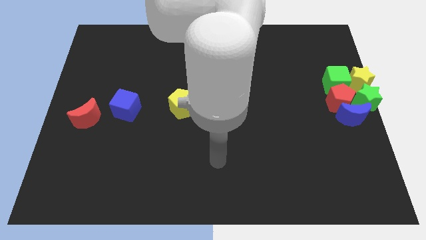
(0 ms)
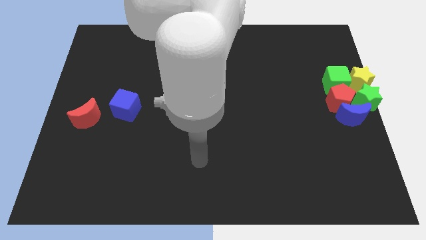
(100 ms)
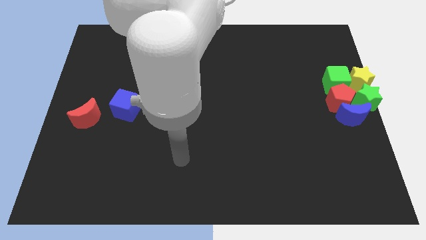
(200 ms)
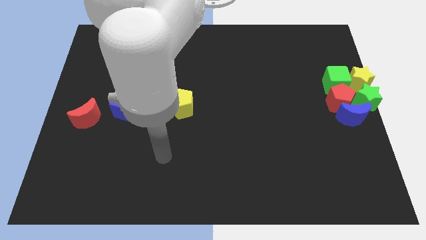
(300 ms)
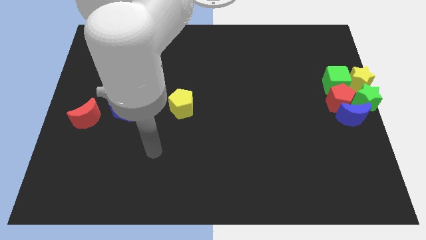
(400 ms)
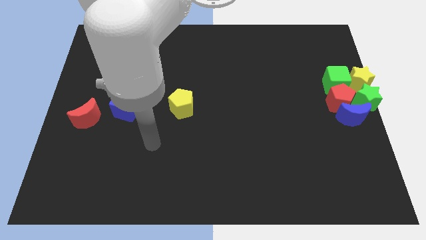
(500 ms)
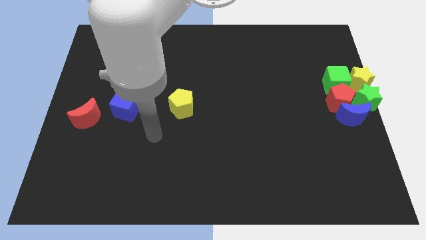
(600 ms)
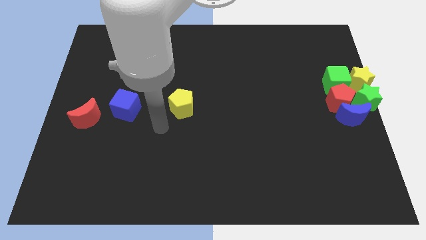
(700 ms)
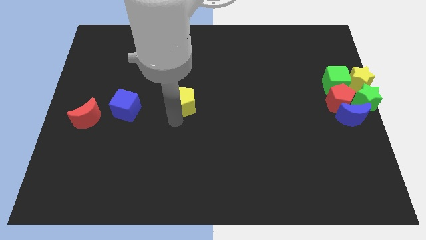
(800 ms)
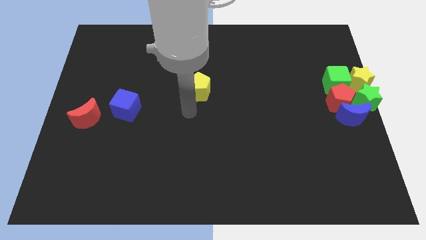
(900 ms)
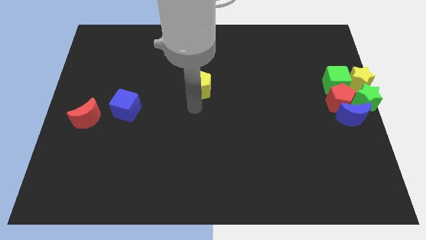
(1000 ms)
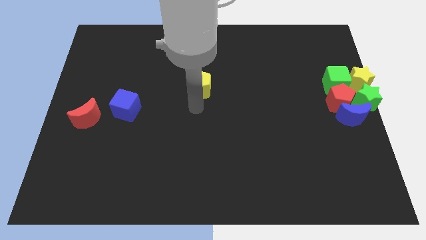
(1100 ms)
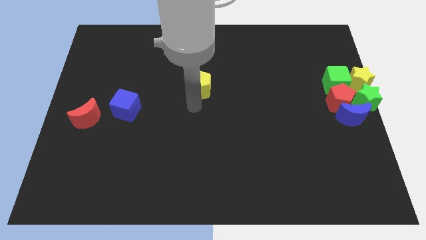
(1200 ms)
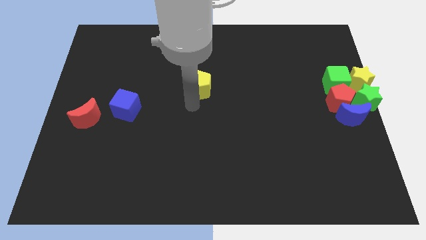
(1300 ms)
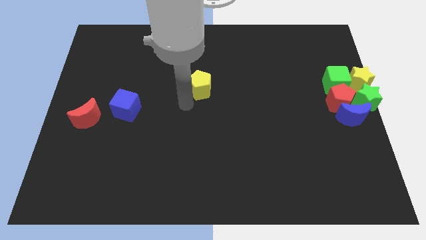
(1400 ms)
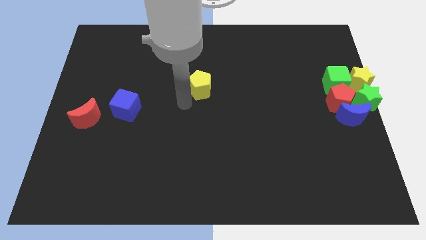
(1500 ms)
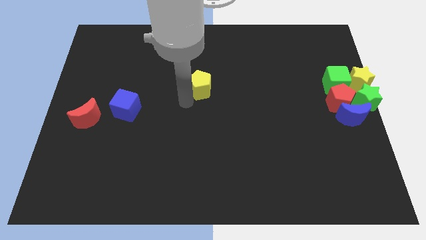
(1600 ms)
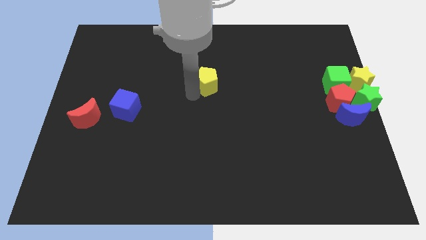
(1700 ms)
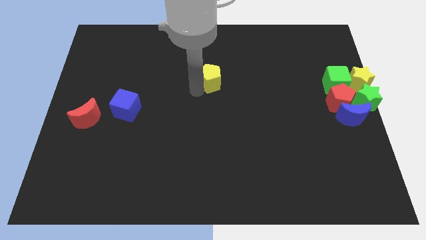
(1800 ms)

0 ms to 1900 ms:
move the yellow pentagon to the top of the board

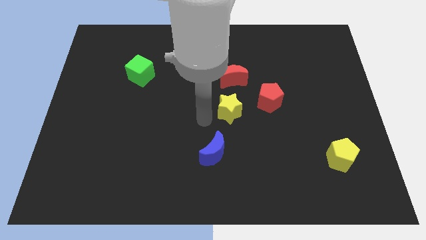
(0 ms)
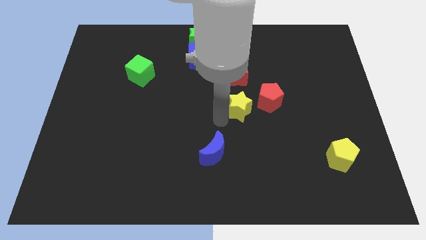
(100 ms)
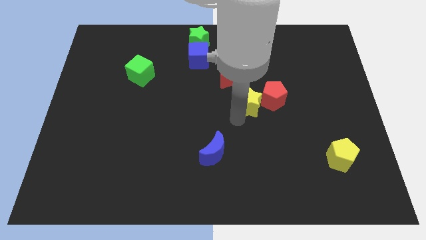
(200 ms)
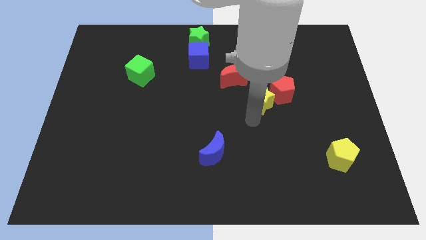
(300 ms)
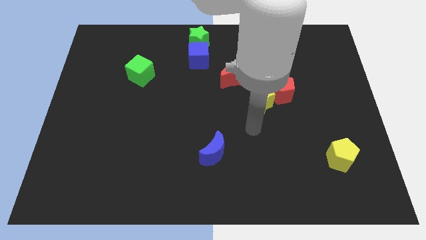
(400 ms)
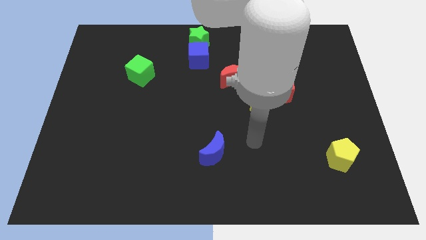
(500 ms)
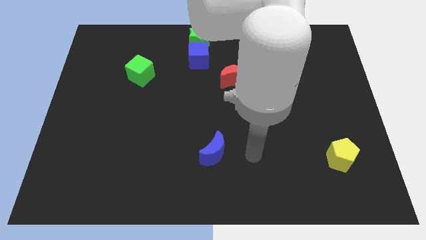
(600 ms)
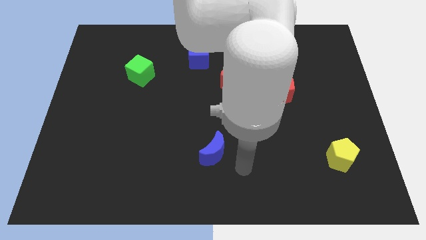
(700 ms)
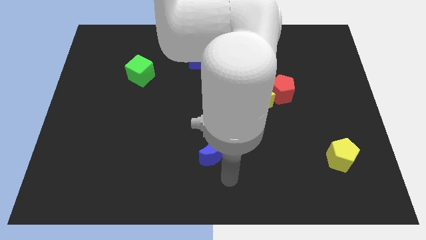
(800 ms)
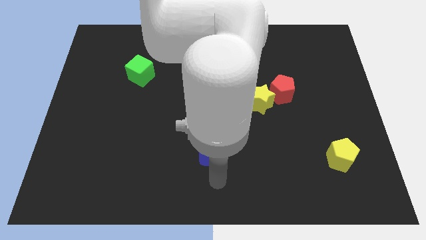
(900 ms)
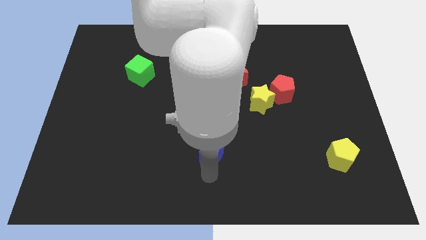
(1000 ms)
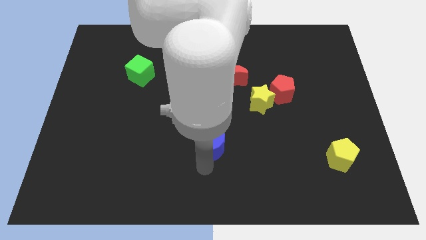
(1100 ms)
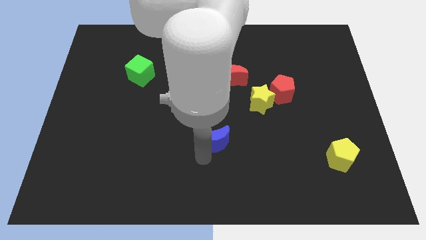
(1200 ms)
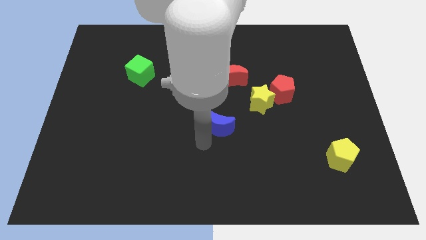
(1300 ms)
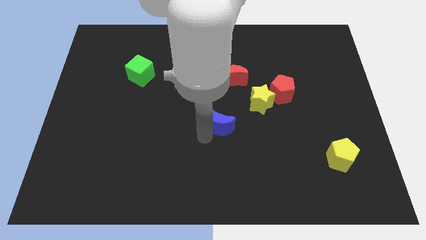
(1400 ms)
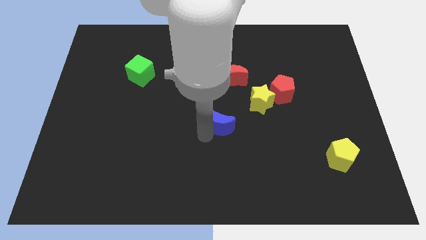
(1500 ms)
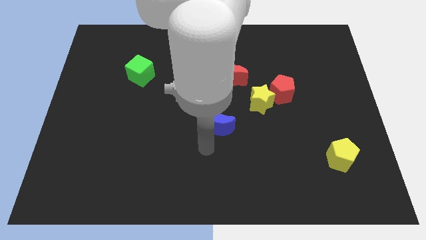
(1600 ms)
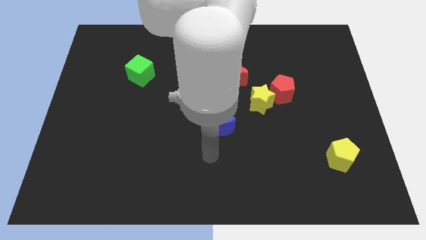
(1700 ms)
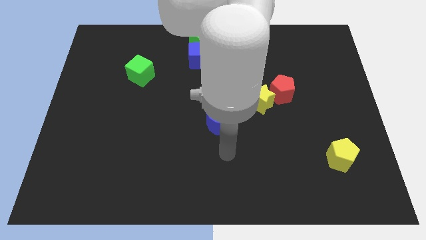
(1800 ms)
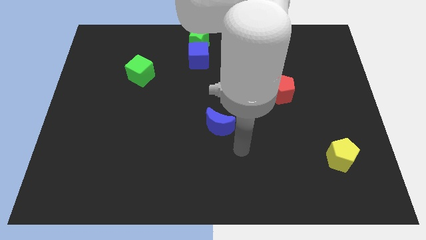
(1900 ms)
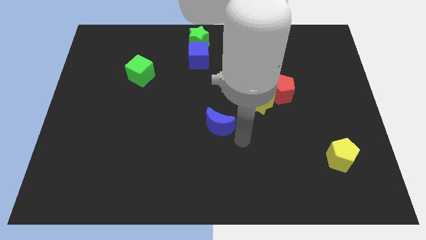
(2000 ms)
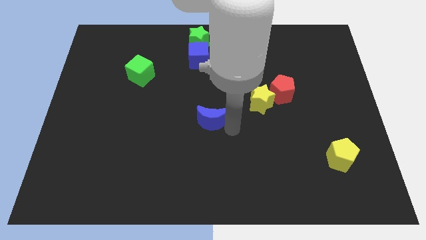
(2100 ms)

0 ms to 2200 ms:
move the blue moon to the center side

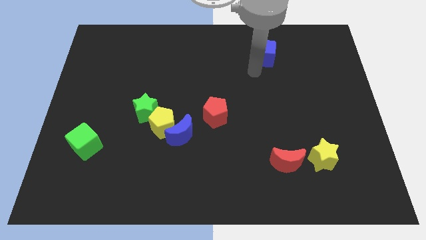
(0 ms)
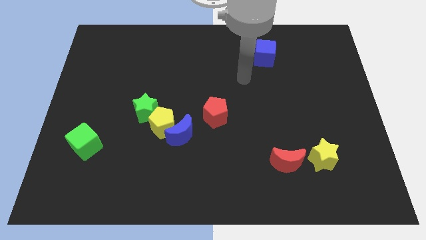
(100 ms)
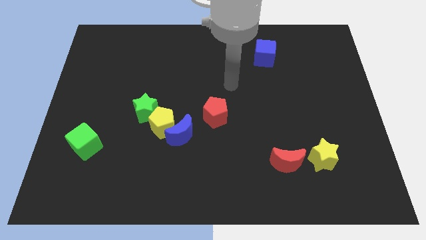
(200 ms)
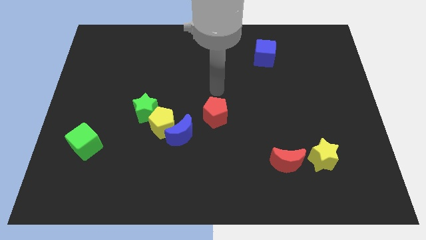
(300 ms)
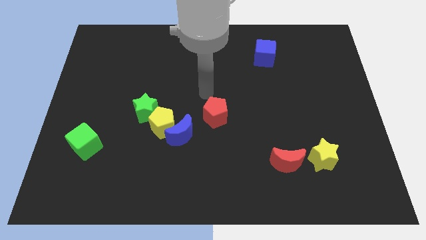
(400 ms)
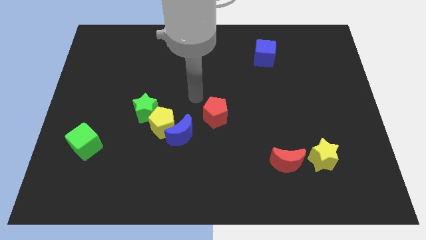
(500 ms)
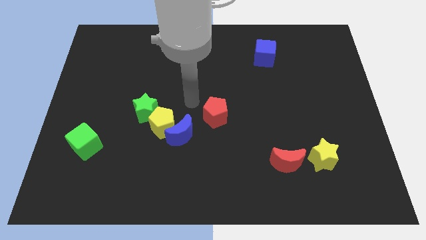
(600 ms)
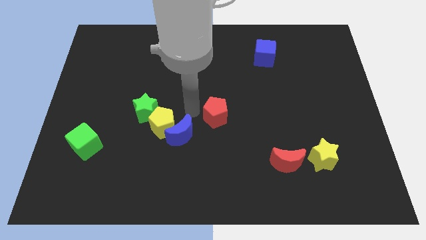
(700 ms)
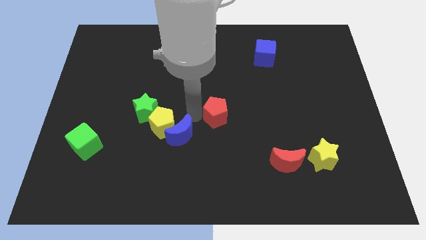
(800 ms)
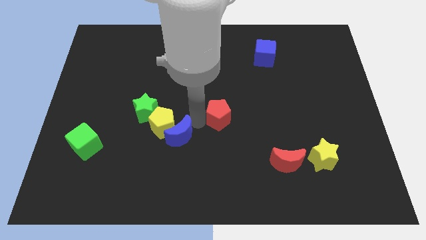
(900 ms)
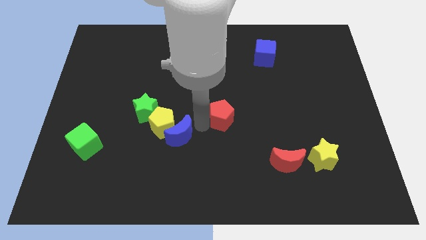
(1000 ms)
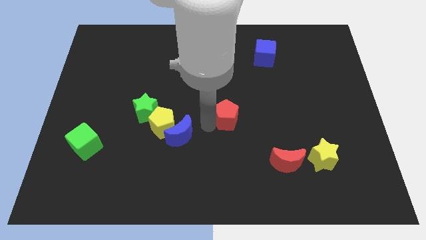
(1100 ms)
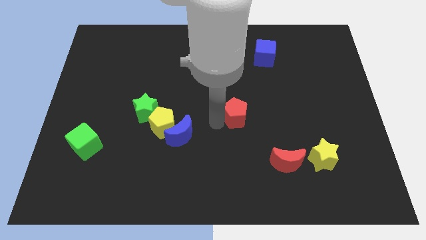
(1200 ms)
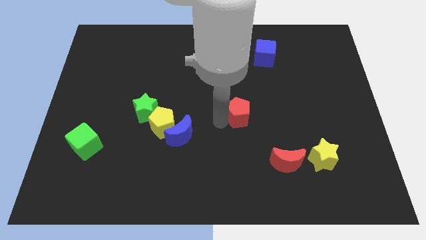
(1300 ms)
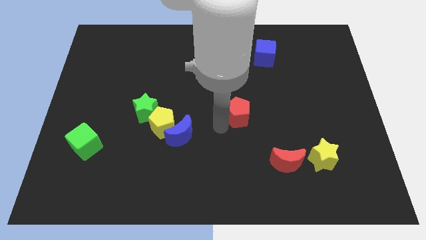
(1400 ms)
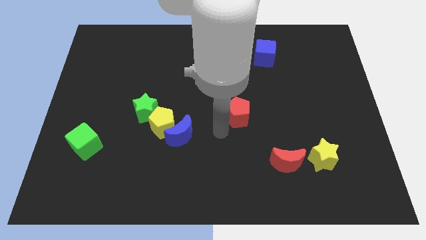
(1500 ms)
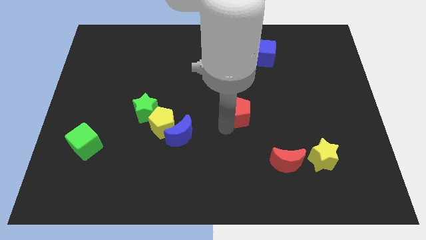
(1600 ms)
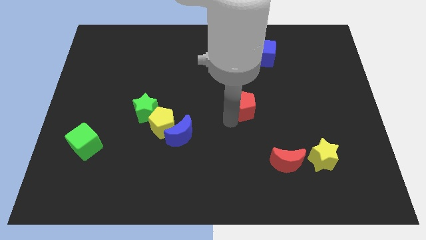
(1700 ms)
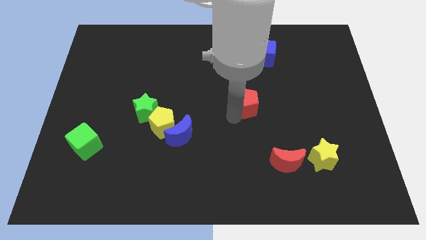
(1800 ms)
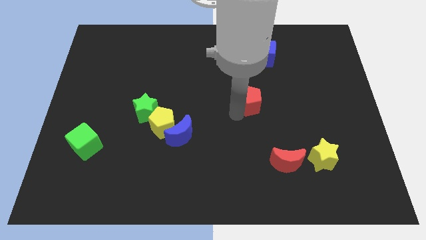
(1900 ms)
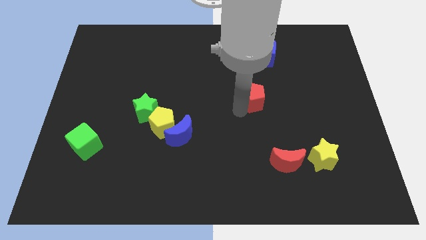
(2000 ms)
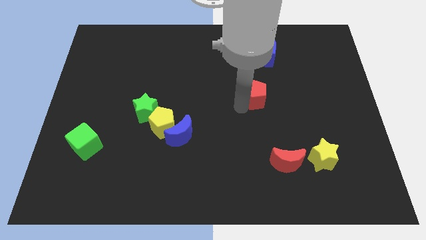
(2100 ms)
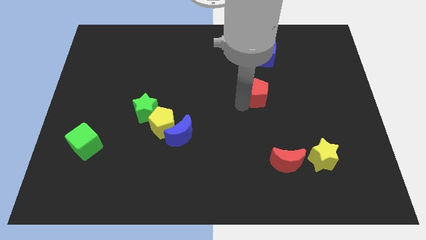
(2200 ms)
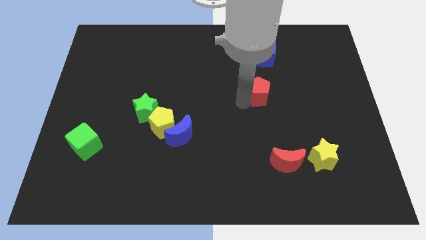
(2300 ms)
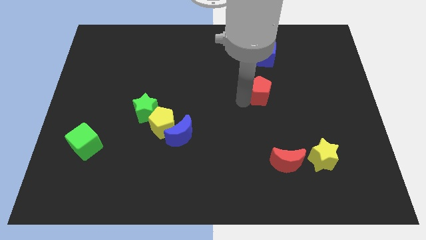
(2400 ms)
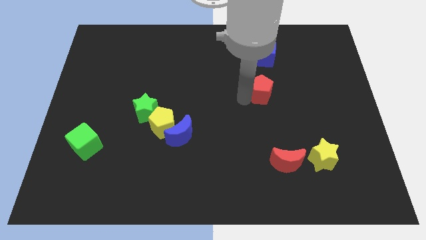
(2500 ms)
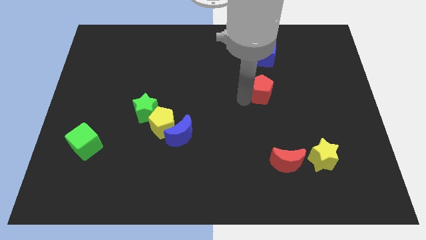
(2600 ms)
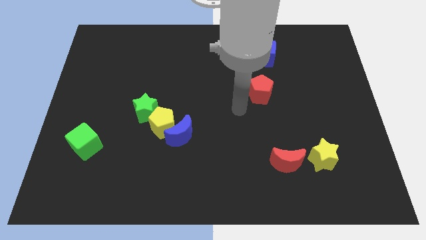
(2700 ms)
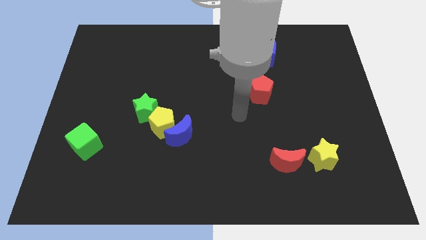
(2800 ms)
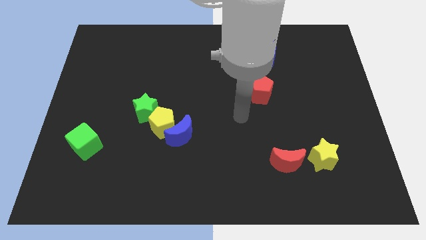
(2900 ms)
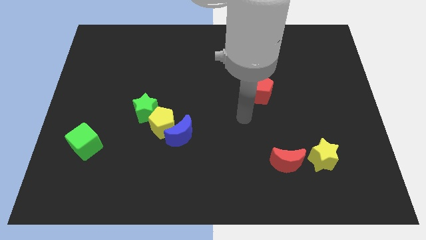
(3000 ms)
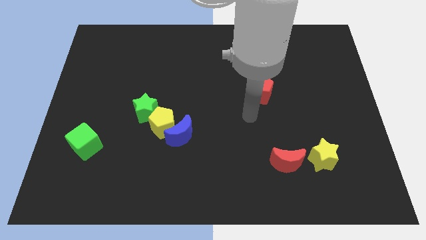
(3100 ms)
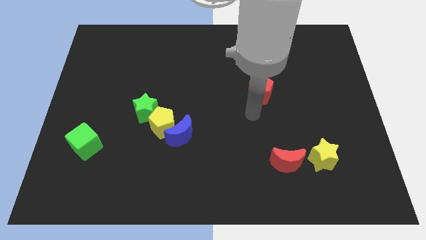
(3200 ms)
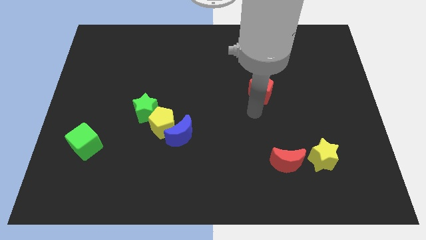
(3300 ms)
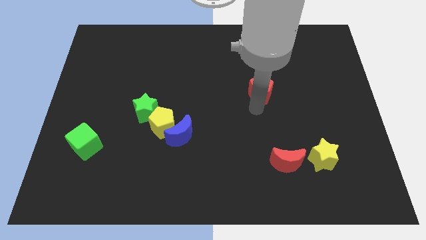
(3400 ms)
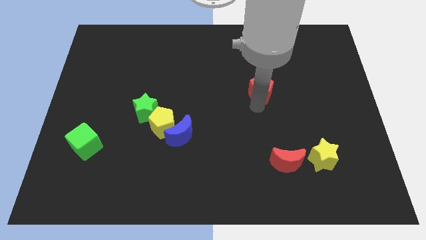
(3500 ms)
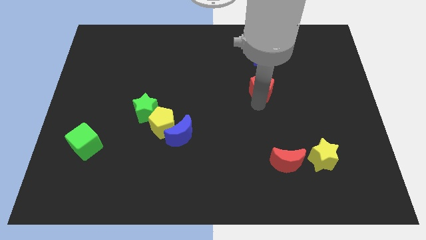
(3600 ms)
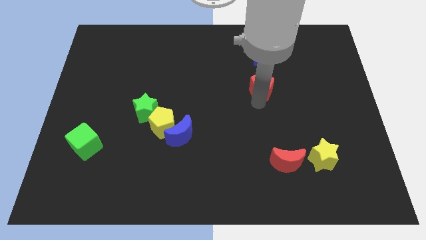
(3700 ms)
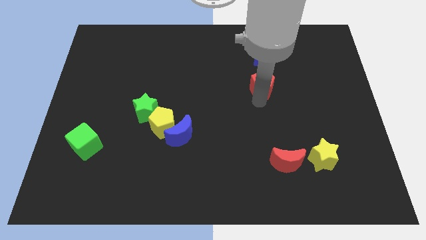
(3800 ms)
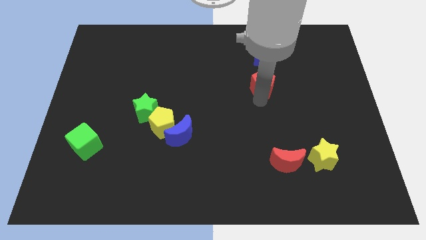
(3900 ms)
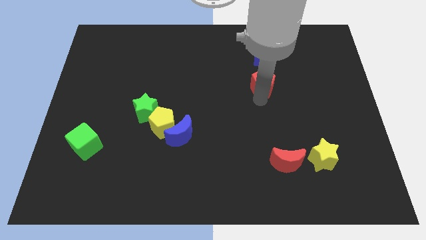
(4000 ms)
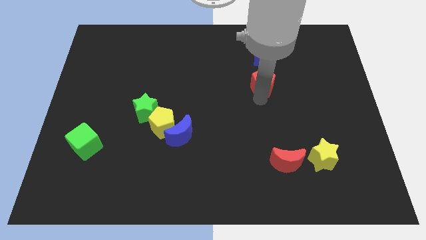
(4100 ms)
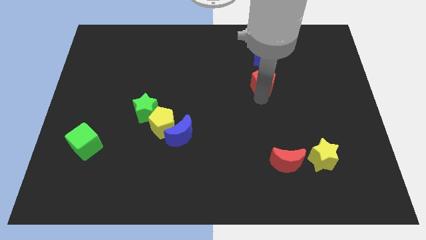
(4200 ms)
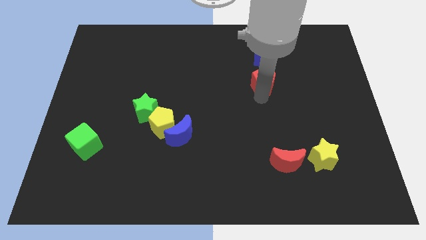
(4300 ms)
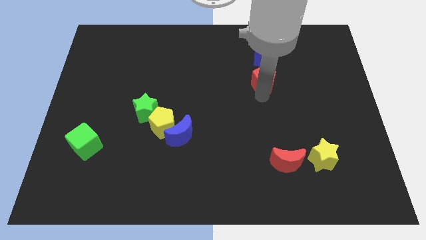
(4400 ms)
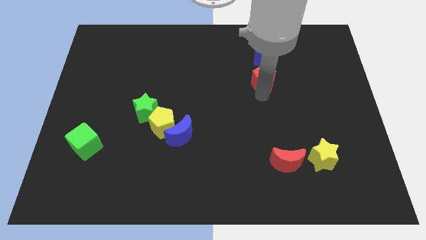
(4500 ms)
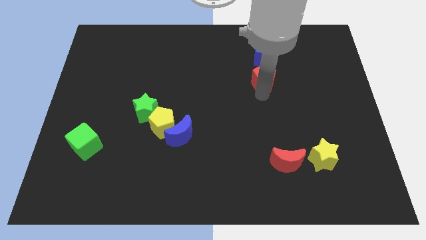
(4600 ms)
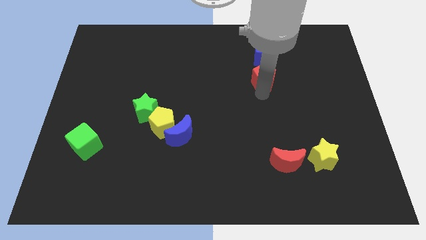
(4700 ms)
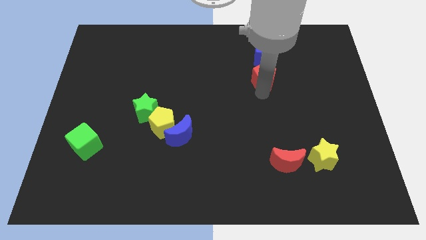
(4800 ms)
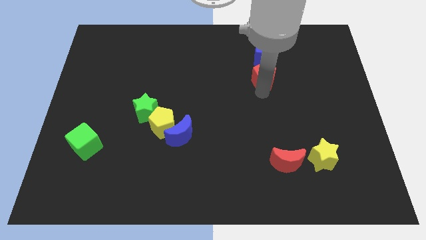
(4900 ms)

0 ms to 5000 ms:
place the red pentagon in between the blue cube and red moon
